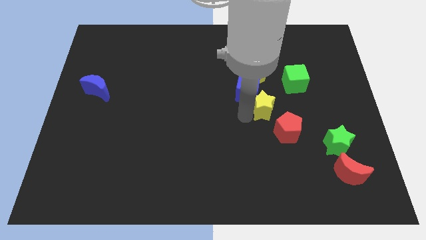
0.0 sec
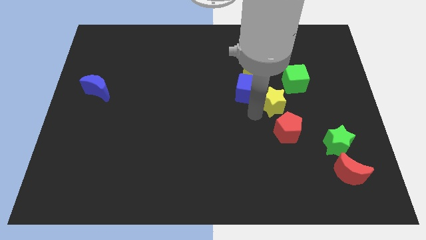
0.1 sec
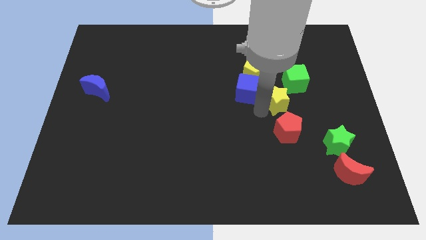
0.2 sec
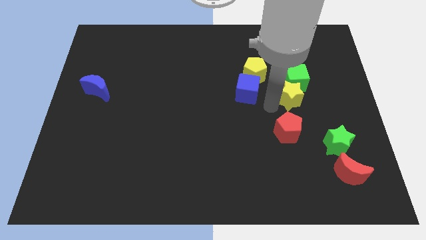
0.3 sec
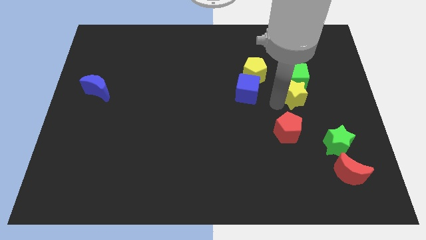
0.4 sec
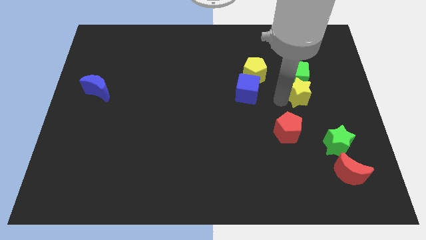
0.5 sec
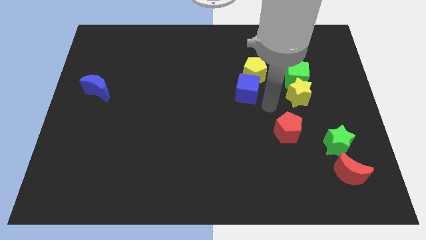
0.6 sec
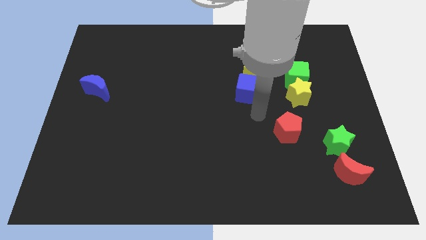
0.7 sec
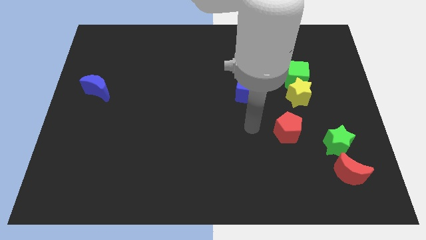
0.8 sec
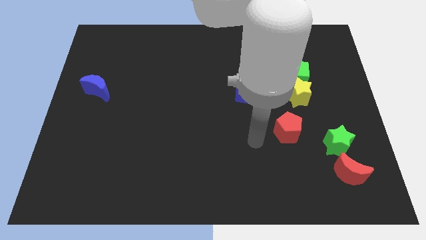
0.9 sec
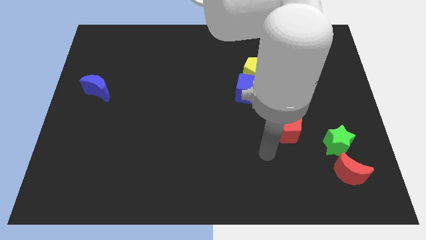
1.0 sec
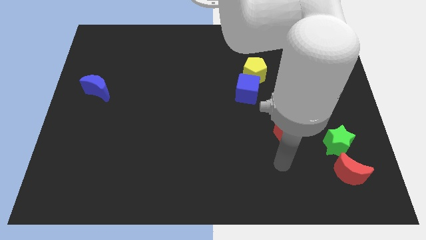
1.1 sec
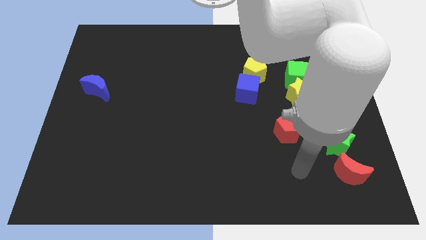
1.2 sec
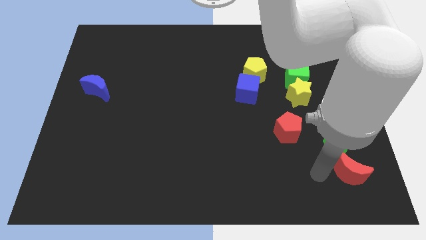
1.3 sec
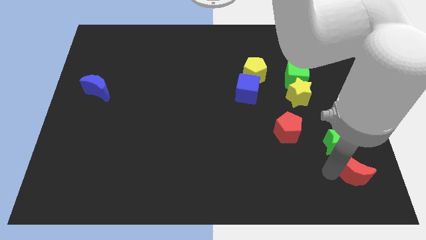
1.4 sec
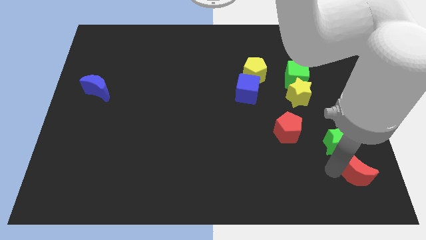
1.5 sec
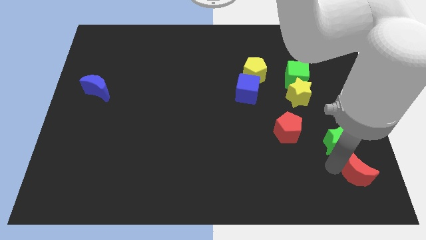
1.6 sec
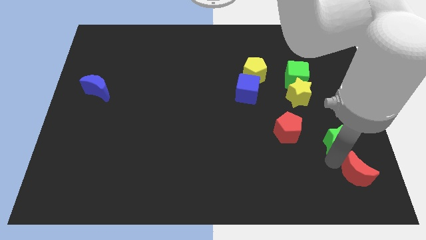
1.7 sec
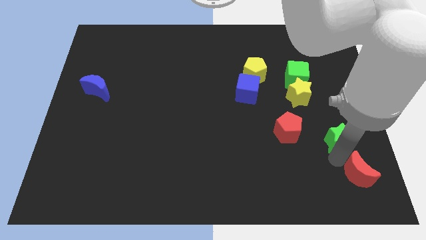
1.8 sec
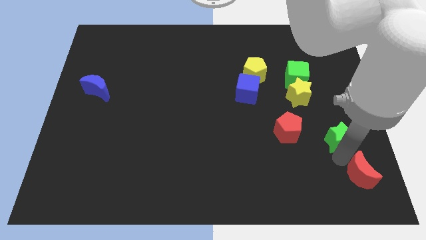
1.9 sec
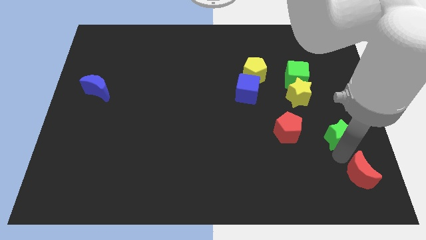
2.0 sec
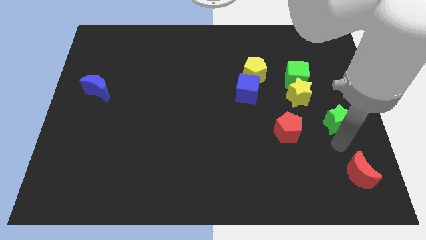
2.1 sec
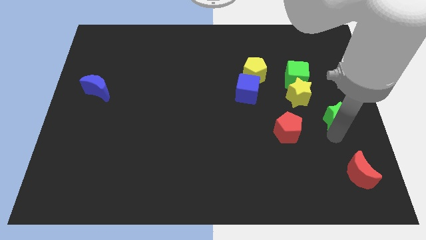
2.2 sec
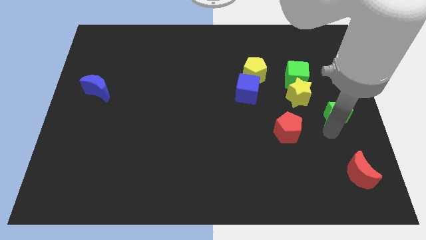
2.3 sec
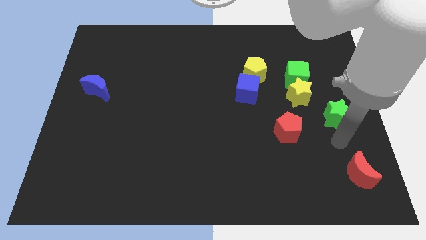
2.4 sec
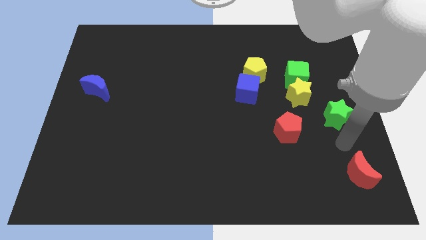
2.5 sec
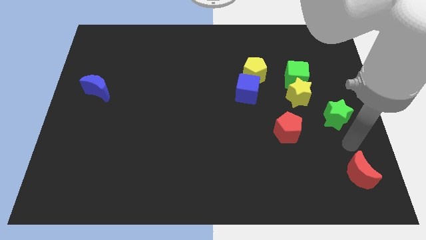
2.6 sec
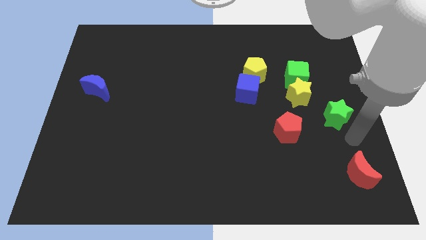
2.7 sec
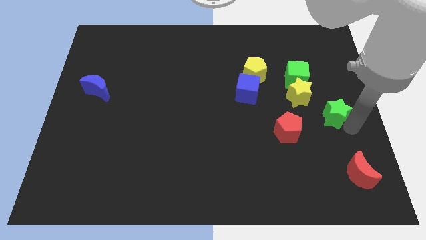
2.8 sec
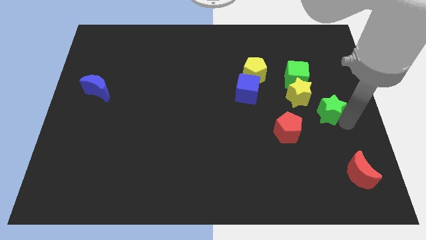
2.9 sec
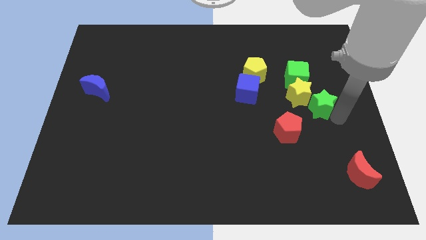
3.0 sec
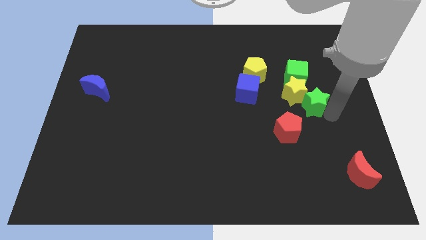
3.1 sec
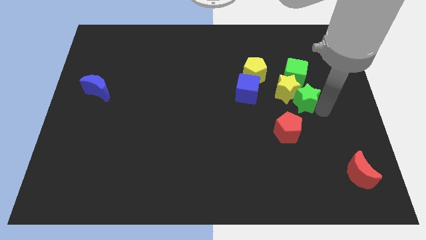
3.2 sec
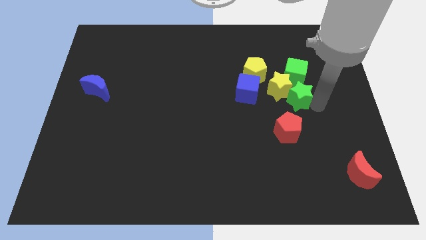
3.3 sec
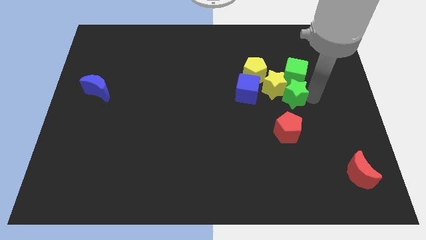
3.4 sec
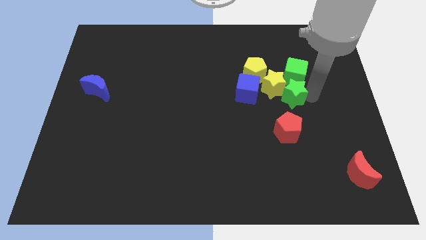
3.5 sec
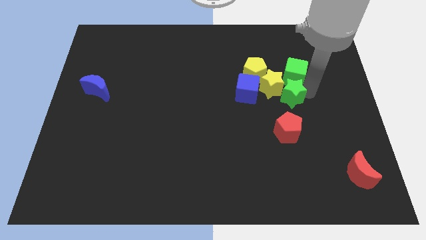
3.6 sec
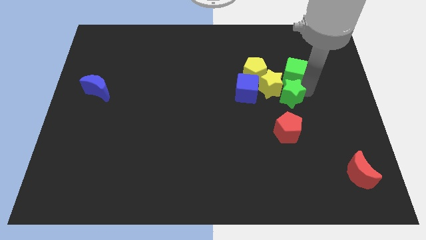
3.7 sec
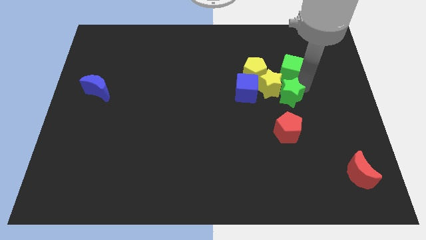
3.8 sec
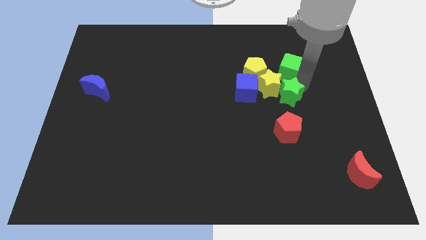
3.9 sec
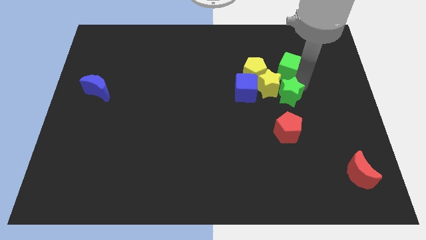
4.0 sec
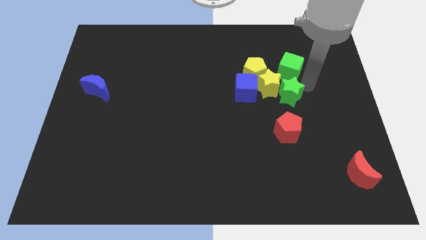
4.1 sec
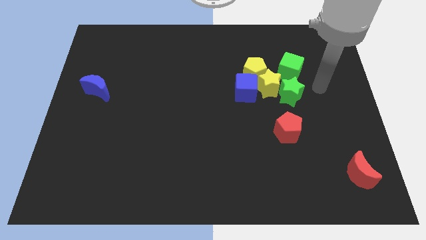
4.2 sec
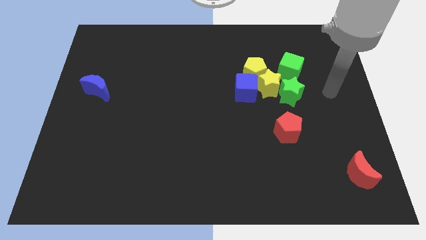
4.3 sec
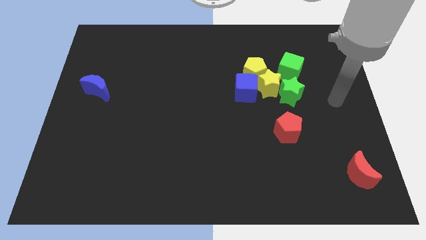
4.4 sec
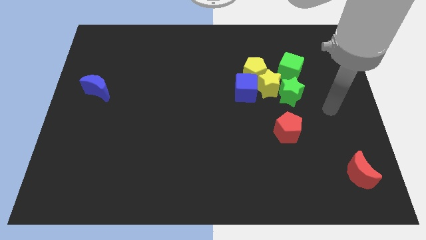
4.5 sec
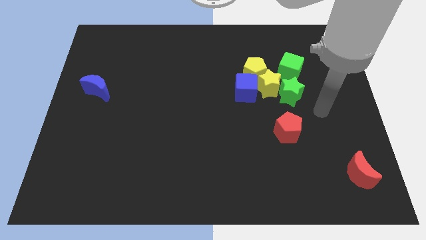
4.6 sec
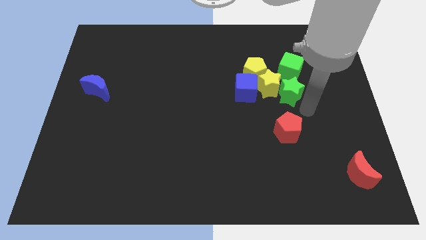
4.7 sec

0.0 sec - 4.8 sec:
place the yellow star and green star below the green cube to form a triangle

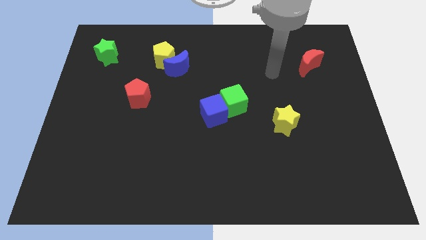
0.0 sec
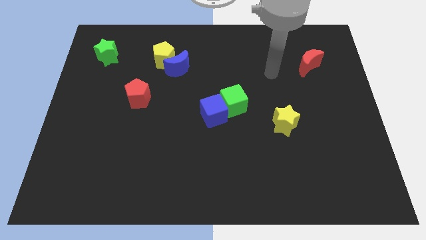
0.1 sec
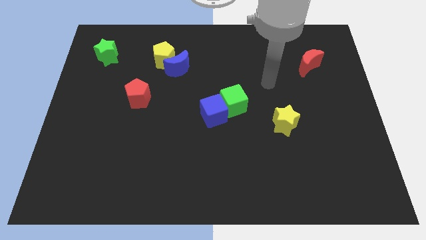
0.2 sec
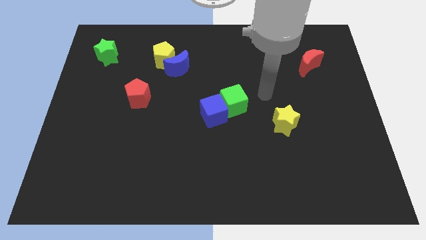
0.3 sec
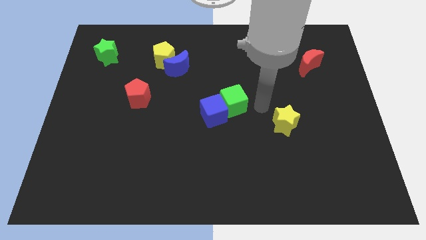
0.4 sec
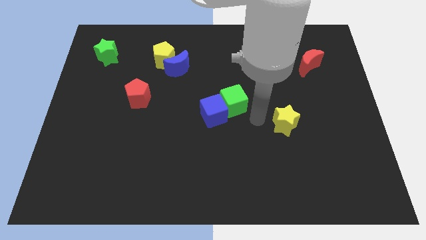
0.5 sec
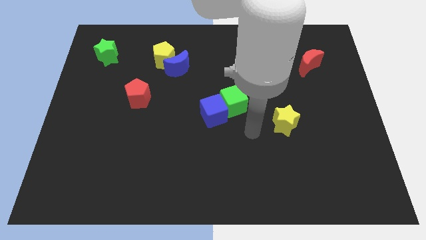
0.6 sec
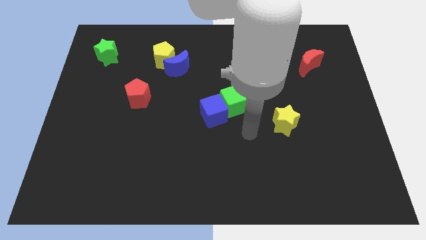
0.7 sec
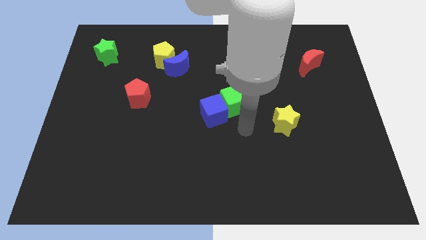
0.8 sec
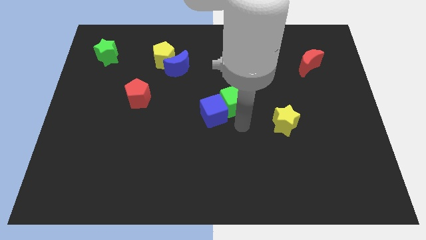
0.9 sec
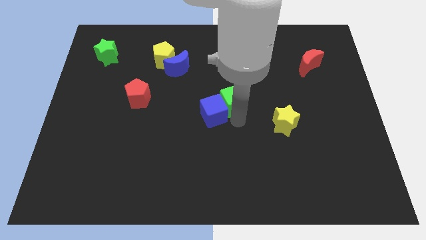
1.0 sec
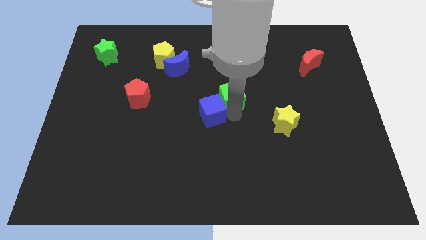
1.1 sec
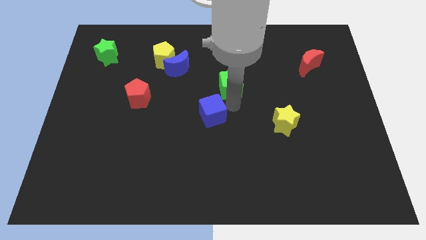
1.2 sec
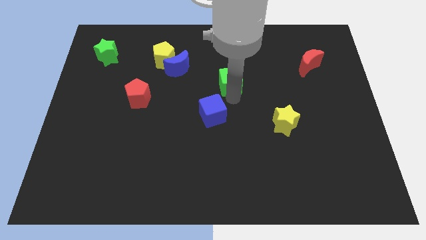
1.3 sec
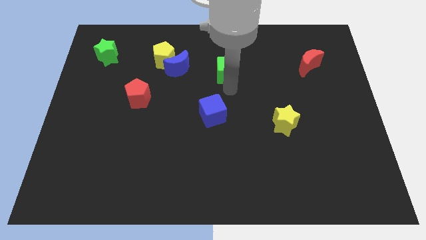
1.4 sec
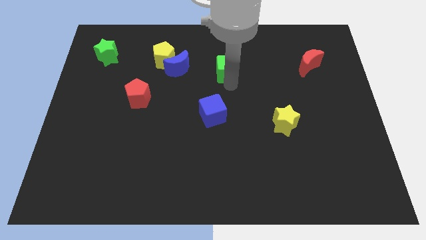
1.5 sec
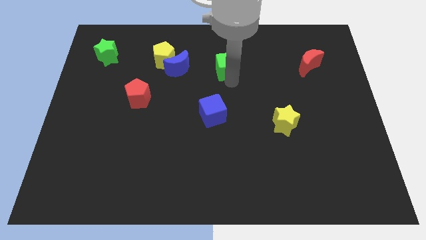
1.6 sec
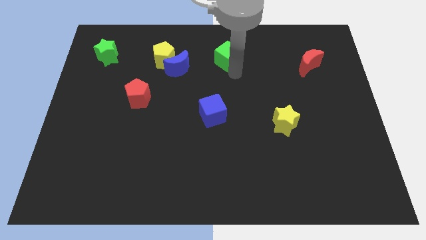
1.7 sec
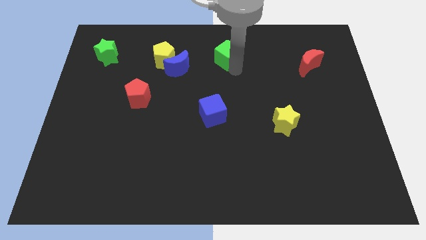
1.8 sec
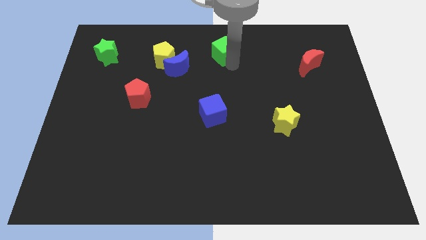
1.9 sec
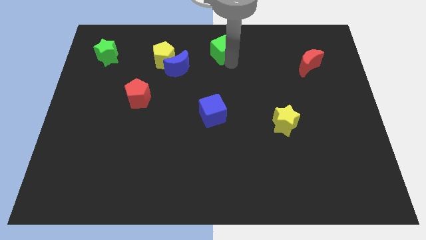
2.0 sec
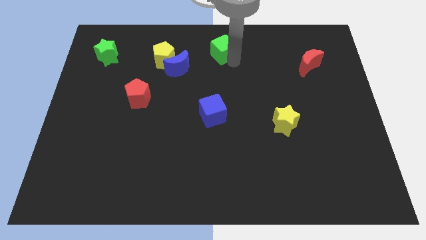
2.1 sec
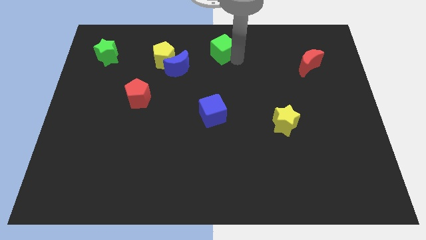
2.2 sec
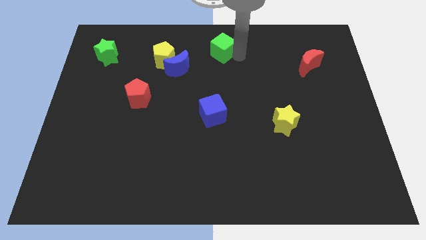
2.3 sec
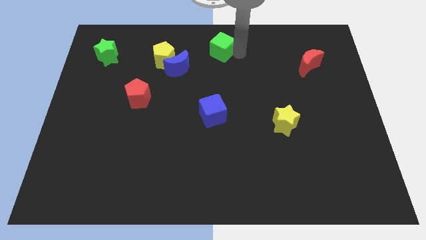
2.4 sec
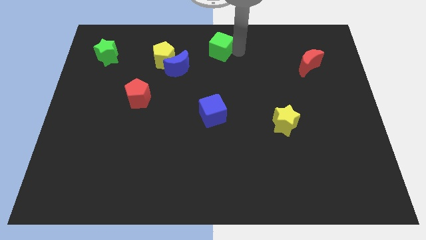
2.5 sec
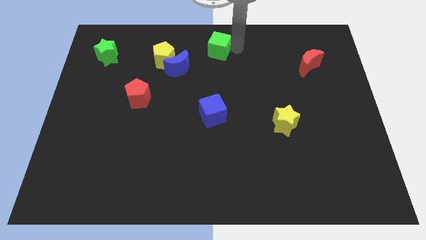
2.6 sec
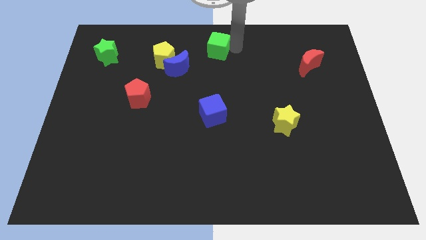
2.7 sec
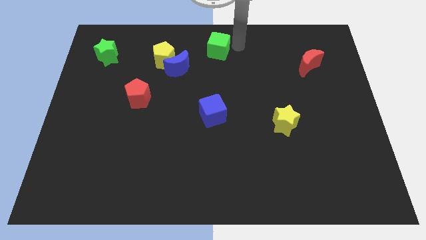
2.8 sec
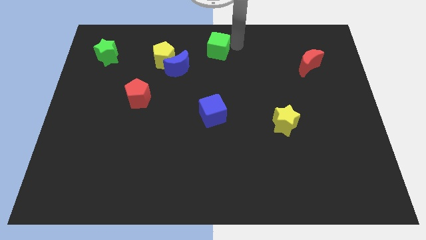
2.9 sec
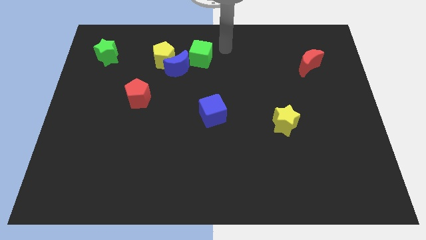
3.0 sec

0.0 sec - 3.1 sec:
move the green cube to the top right side of the blue moon

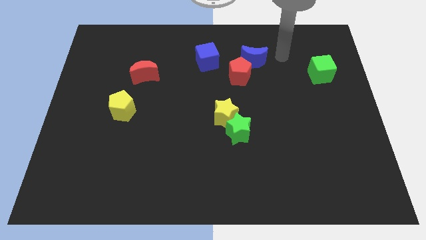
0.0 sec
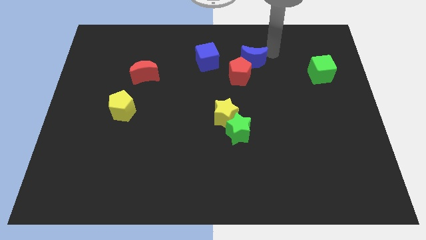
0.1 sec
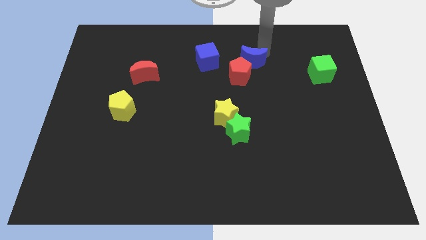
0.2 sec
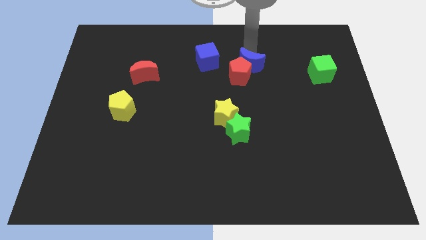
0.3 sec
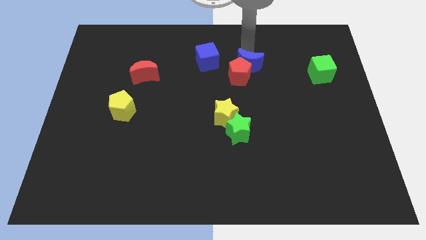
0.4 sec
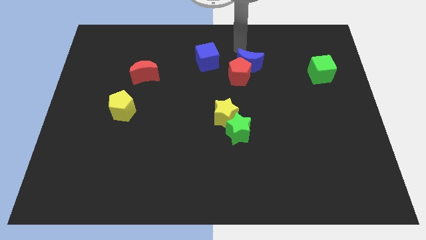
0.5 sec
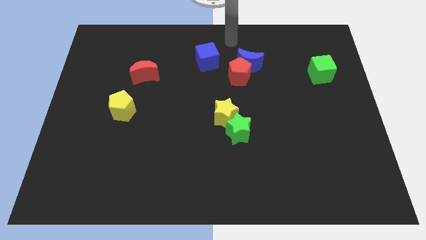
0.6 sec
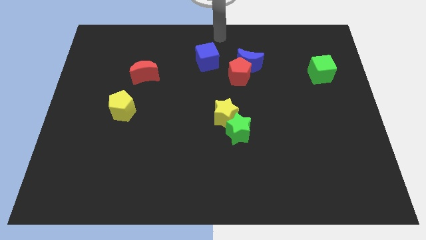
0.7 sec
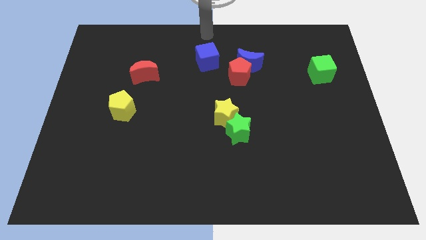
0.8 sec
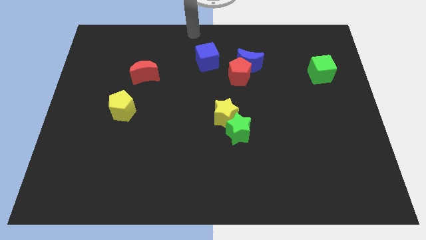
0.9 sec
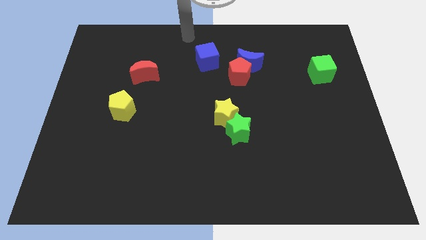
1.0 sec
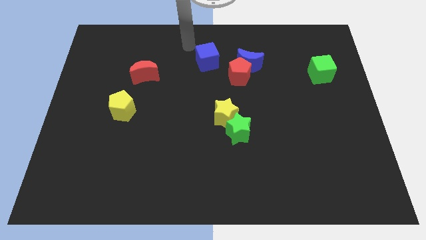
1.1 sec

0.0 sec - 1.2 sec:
push blue crescent towards red pentagon
